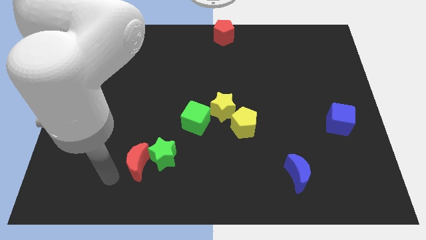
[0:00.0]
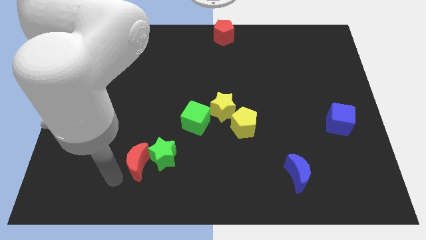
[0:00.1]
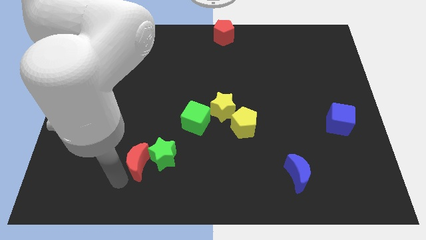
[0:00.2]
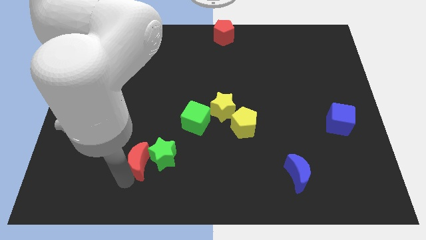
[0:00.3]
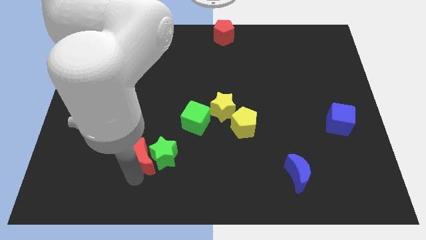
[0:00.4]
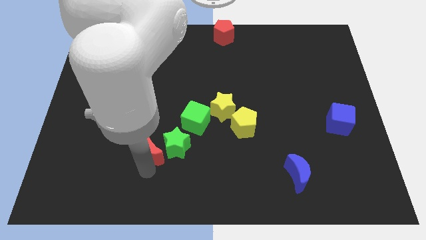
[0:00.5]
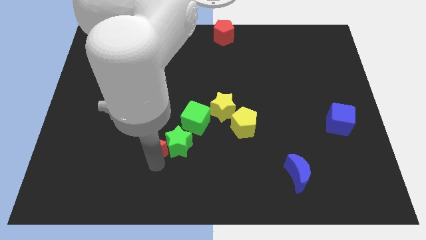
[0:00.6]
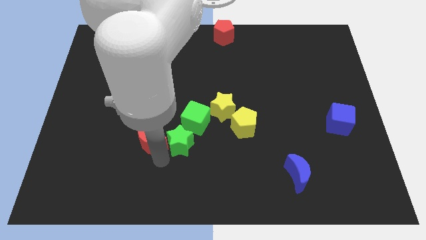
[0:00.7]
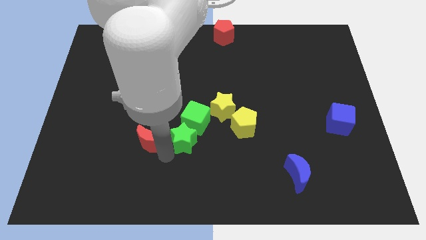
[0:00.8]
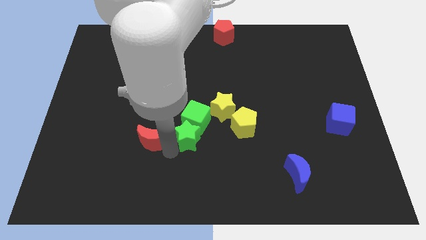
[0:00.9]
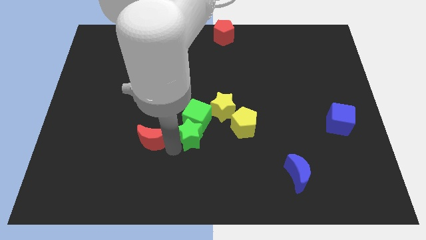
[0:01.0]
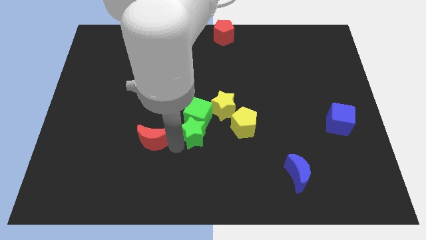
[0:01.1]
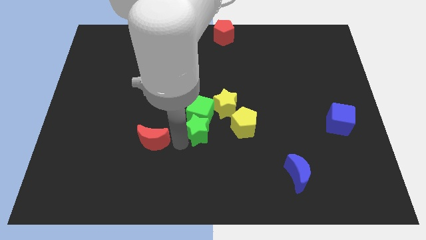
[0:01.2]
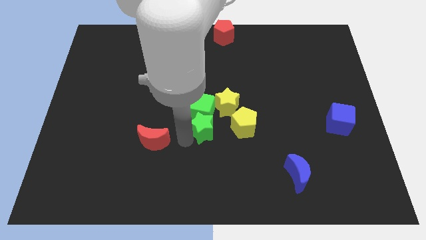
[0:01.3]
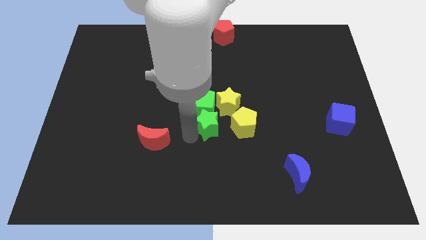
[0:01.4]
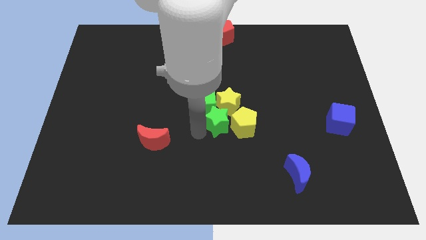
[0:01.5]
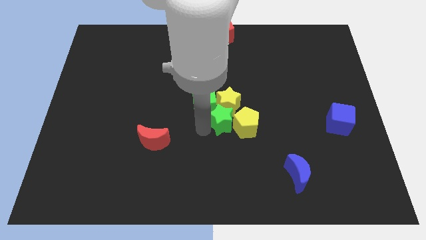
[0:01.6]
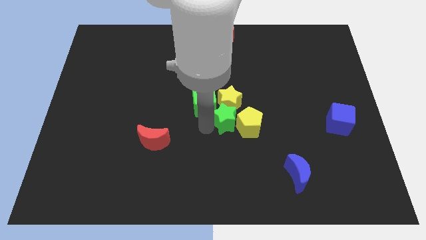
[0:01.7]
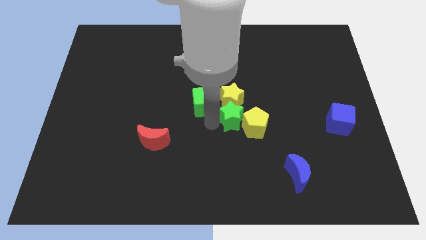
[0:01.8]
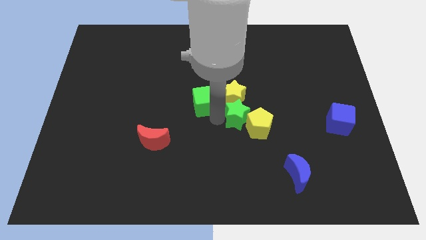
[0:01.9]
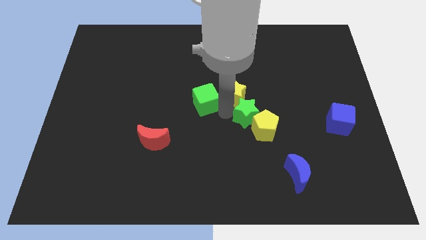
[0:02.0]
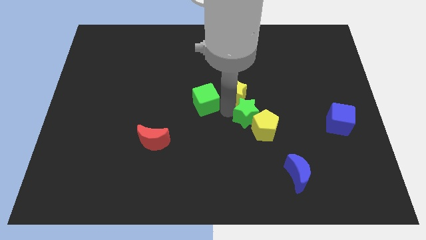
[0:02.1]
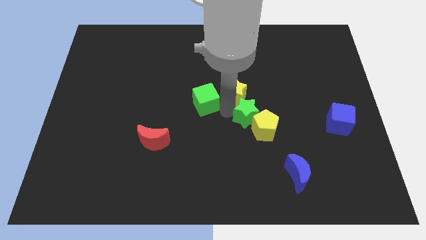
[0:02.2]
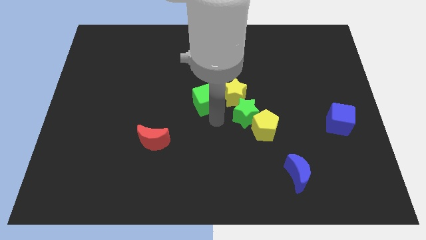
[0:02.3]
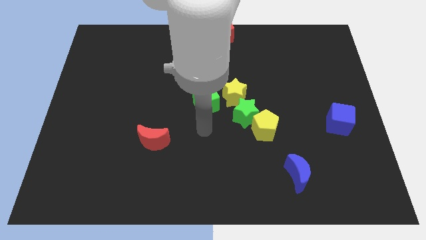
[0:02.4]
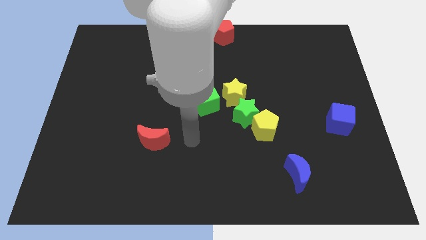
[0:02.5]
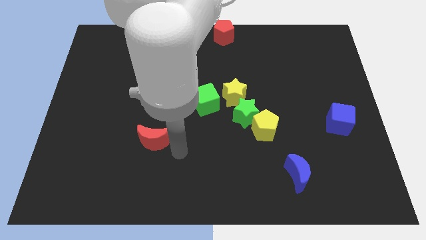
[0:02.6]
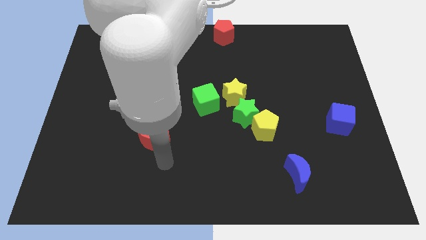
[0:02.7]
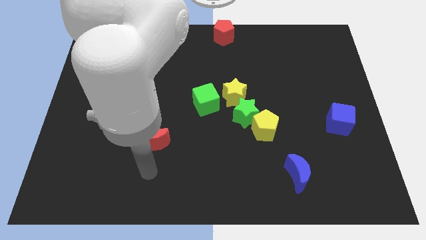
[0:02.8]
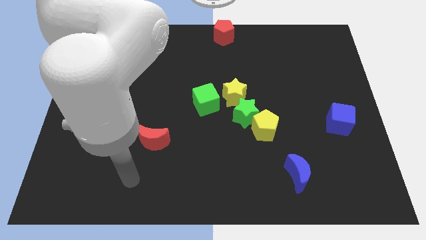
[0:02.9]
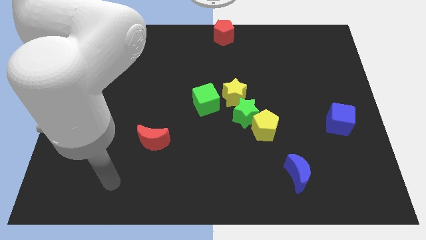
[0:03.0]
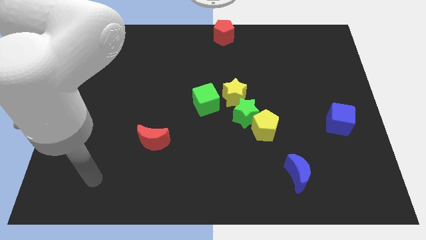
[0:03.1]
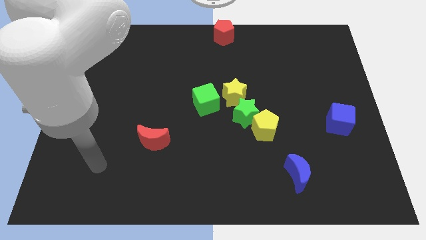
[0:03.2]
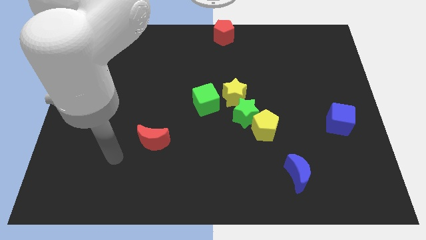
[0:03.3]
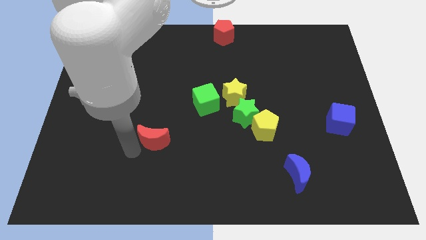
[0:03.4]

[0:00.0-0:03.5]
place the green star in between the yellow blocks

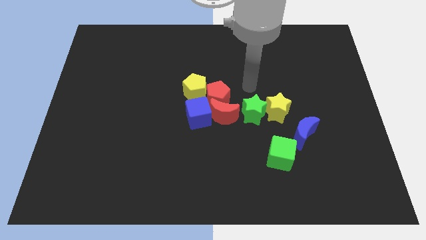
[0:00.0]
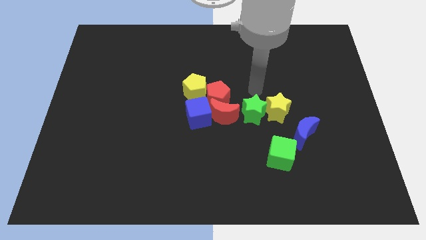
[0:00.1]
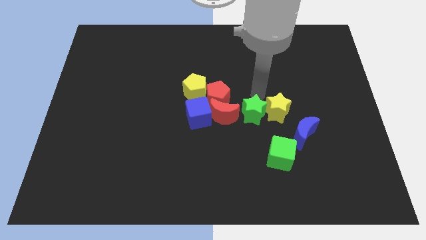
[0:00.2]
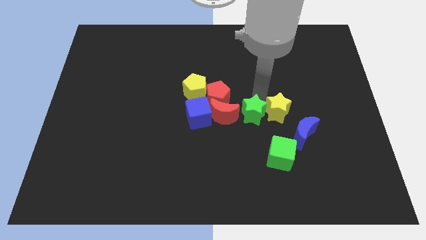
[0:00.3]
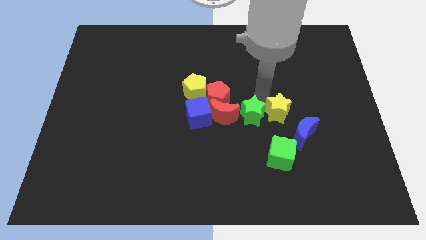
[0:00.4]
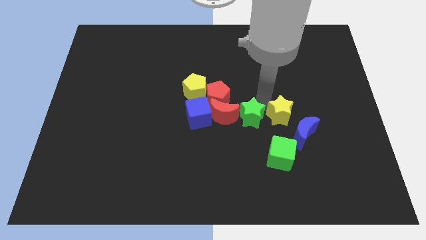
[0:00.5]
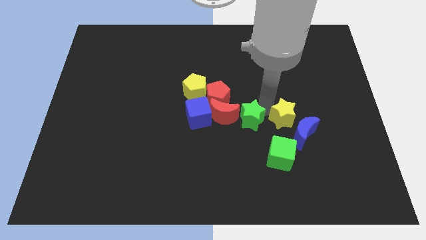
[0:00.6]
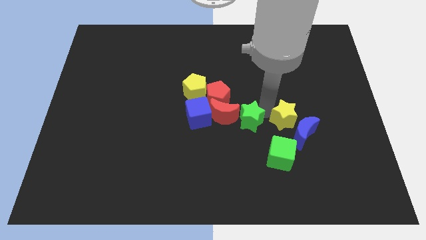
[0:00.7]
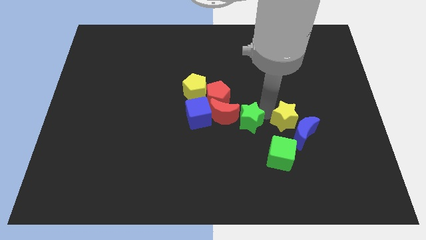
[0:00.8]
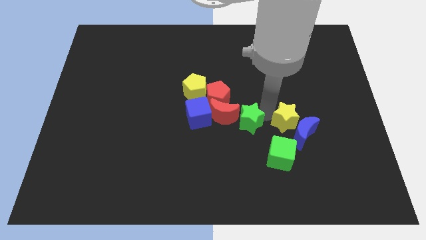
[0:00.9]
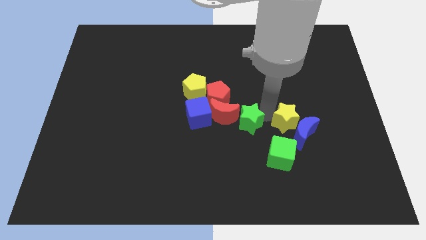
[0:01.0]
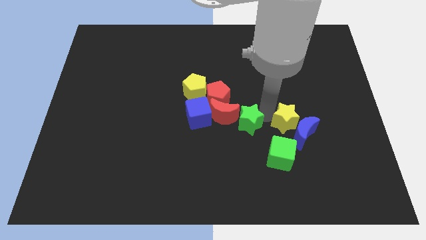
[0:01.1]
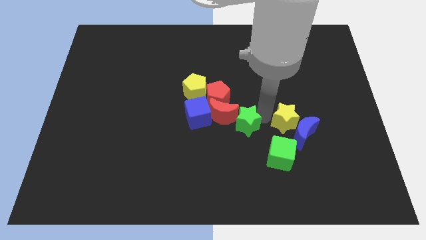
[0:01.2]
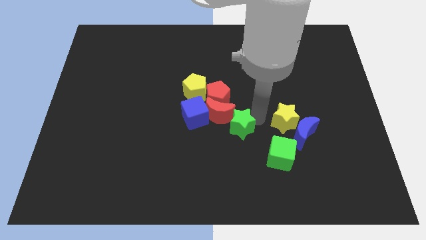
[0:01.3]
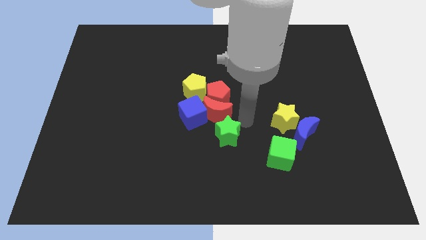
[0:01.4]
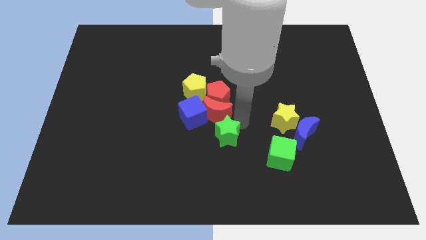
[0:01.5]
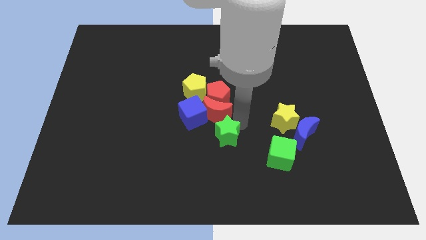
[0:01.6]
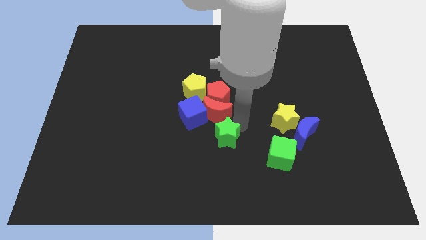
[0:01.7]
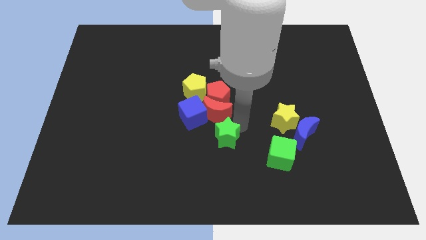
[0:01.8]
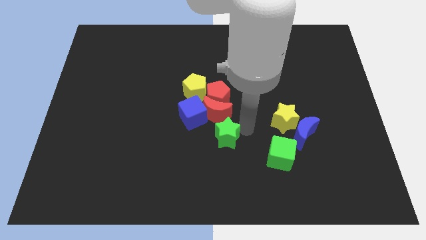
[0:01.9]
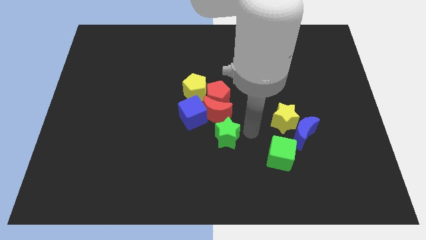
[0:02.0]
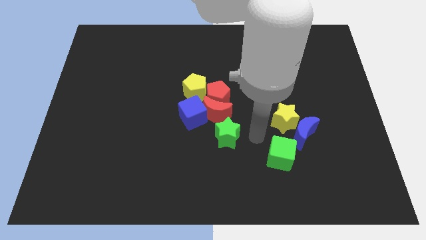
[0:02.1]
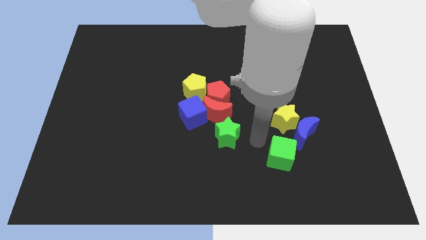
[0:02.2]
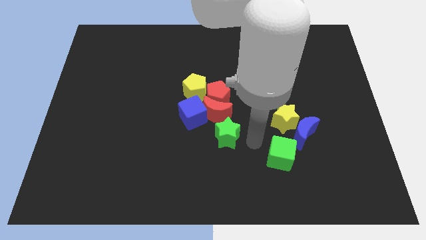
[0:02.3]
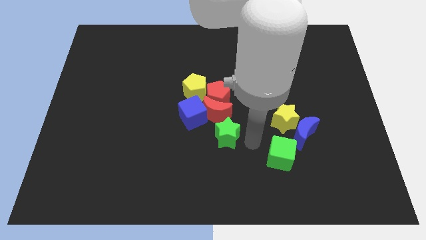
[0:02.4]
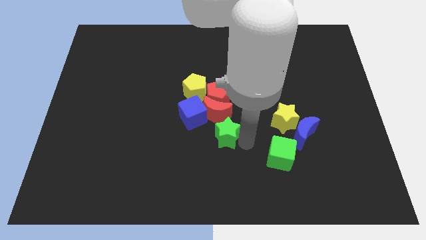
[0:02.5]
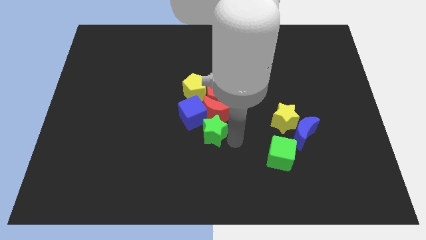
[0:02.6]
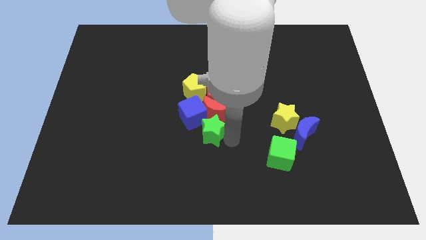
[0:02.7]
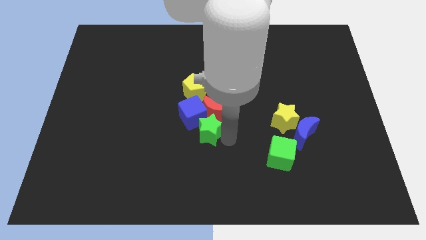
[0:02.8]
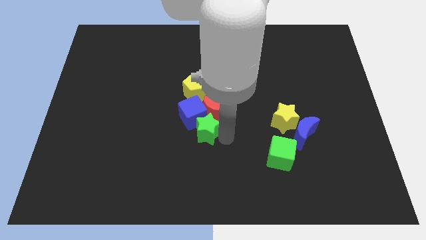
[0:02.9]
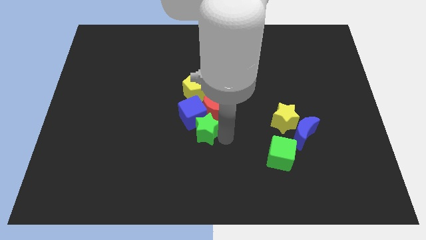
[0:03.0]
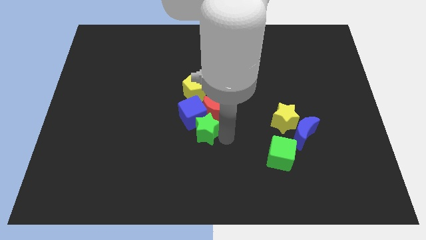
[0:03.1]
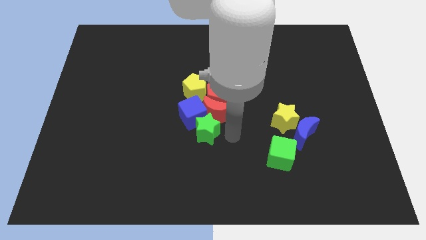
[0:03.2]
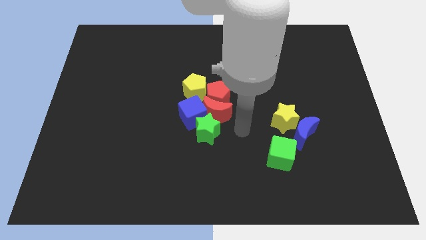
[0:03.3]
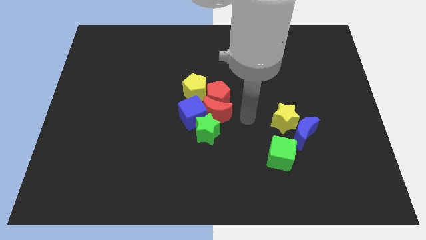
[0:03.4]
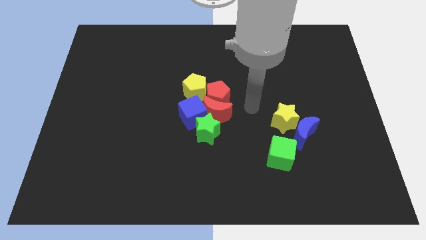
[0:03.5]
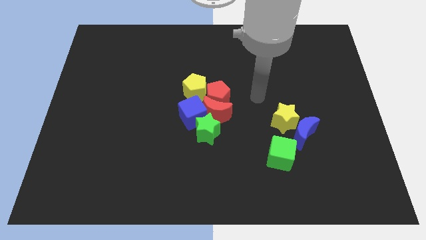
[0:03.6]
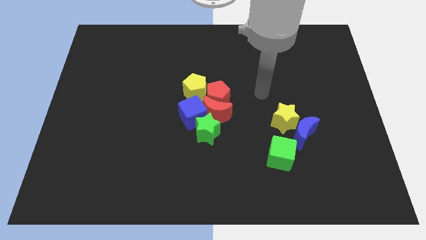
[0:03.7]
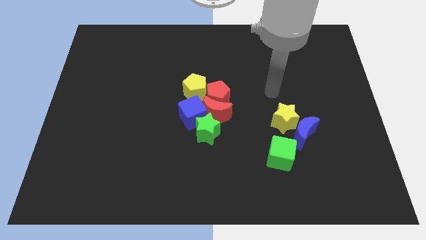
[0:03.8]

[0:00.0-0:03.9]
place the green star below the group of blocks

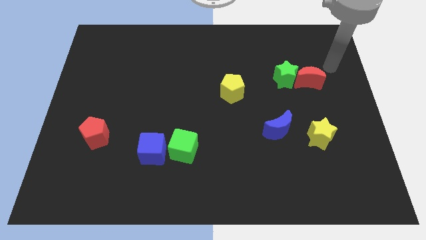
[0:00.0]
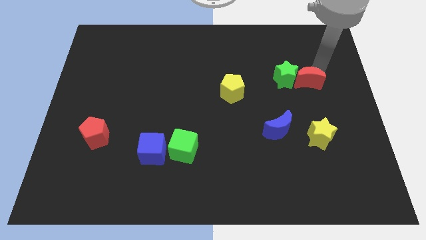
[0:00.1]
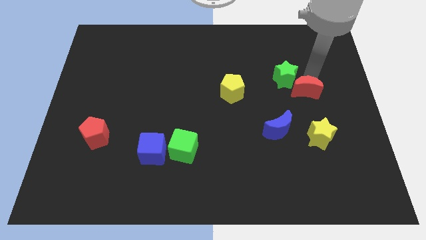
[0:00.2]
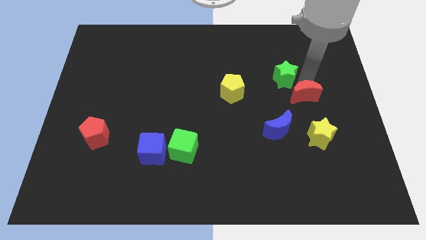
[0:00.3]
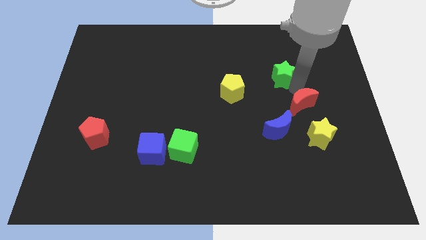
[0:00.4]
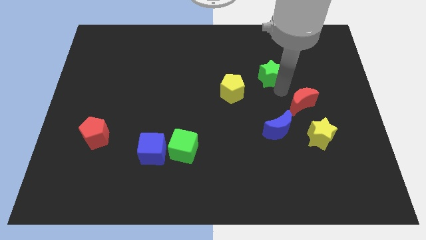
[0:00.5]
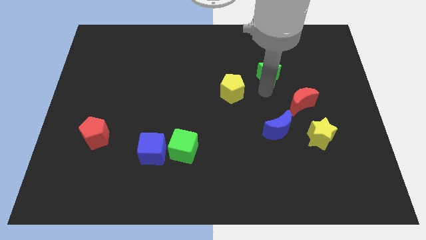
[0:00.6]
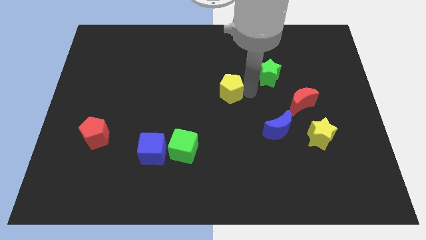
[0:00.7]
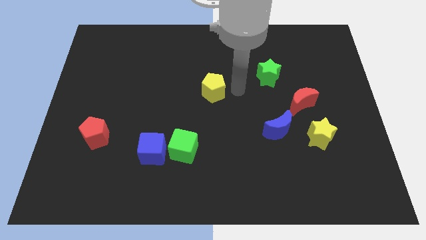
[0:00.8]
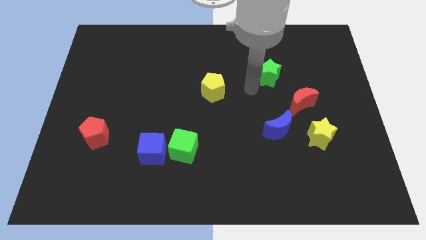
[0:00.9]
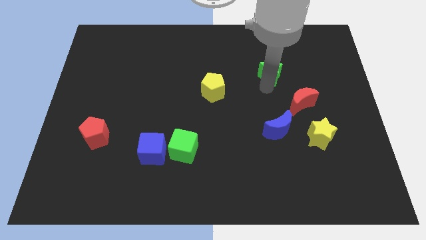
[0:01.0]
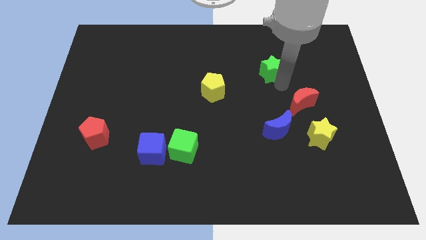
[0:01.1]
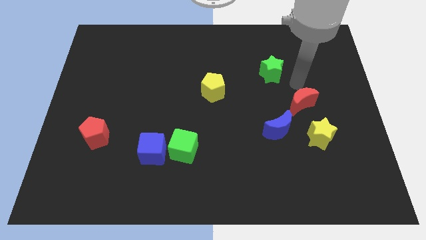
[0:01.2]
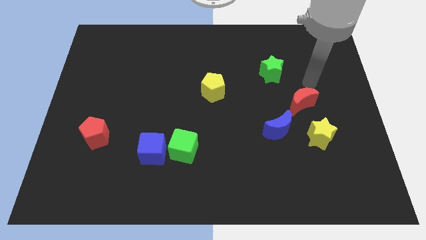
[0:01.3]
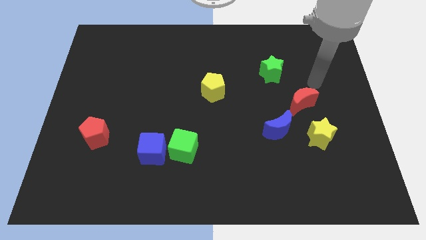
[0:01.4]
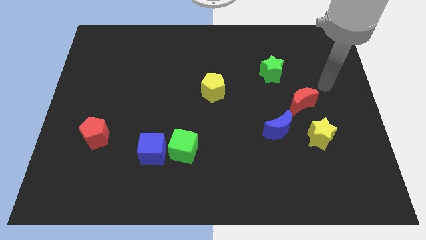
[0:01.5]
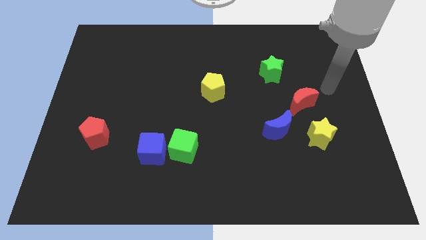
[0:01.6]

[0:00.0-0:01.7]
separate the red crescent and the green star
